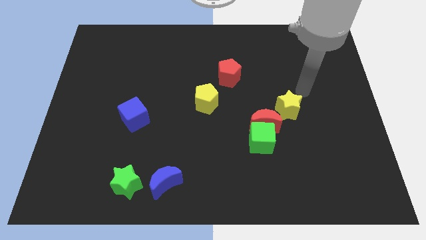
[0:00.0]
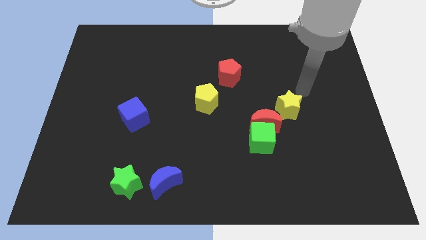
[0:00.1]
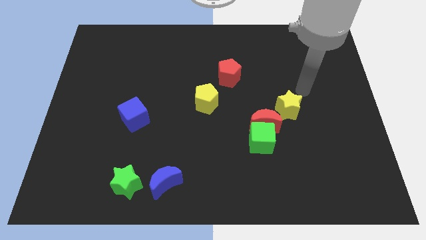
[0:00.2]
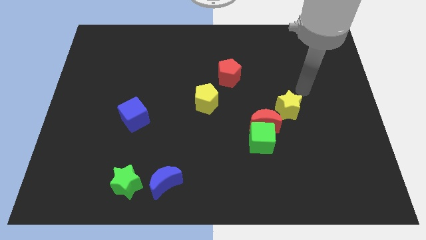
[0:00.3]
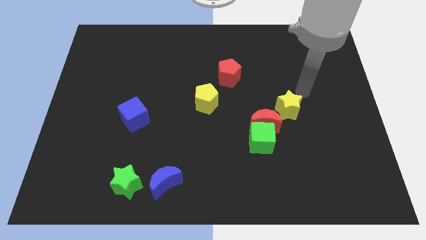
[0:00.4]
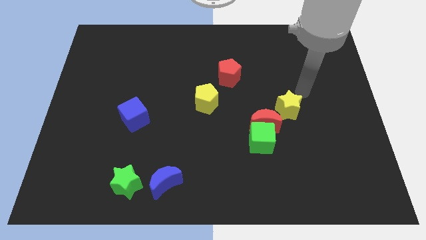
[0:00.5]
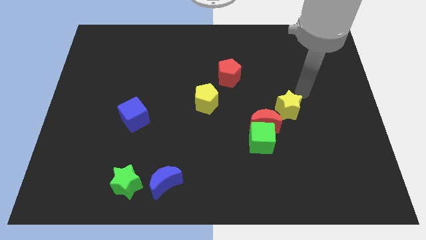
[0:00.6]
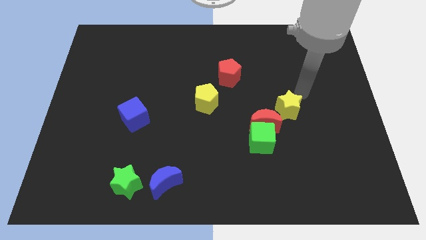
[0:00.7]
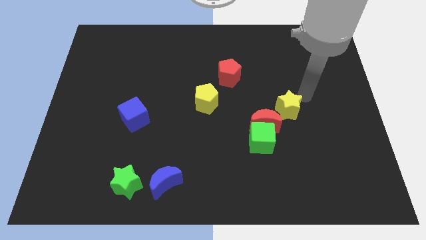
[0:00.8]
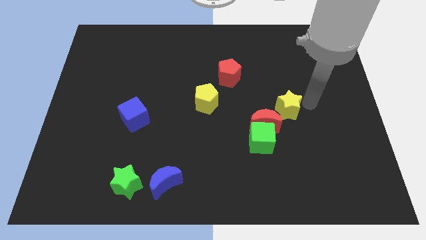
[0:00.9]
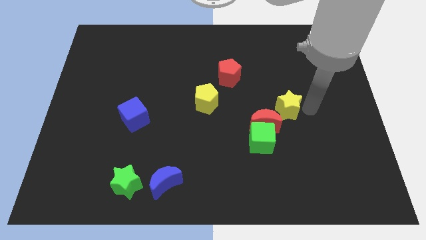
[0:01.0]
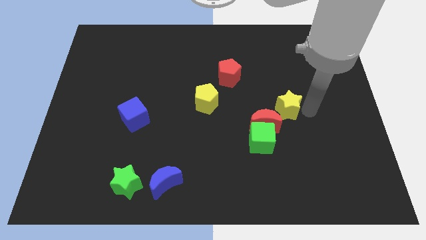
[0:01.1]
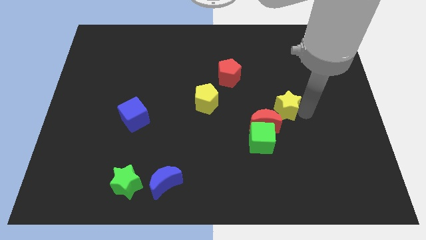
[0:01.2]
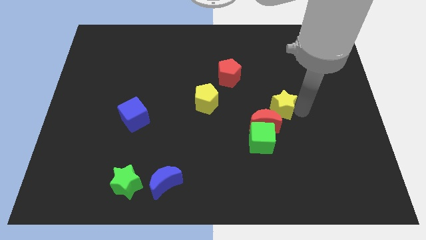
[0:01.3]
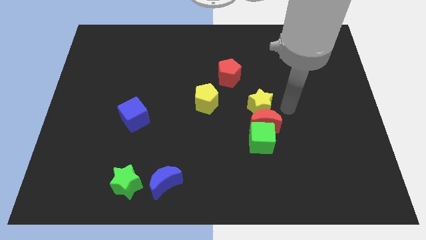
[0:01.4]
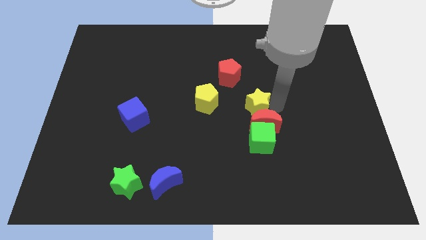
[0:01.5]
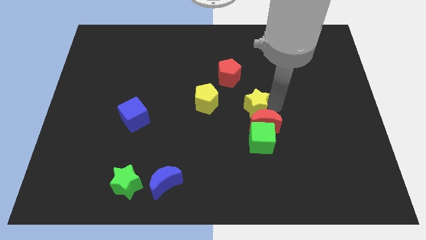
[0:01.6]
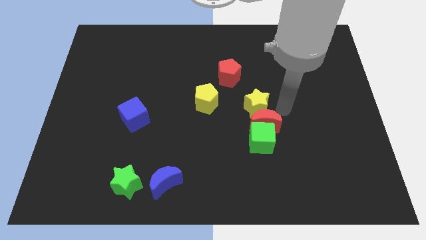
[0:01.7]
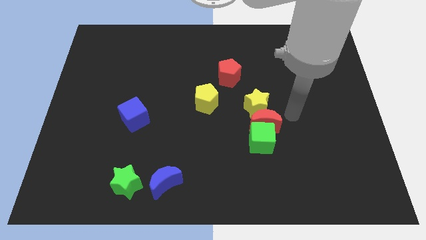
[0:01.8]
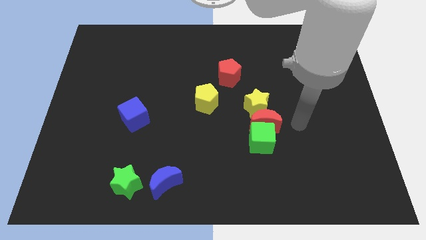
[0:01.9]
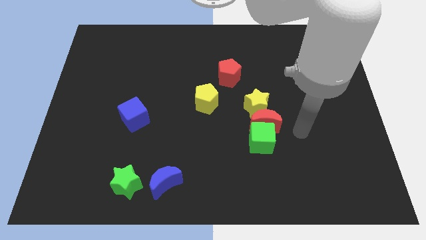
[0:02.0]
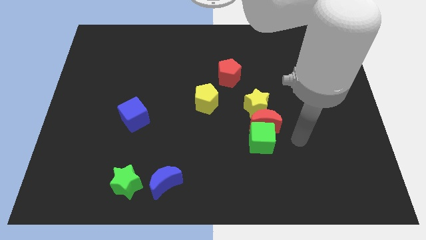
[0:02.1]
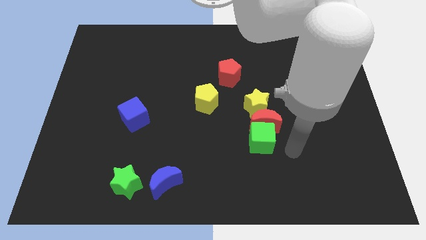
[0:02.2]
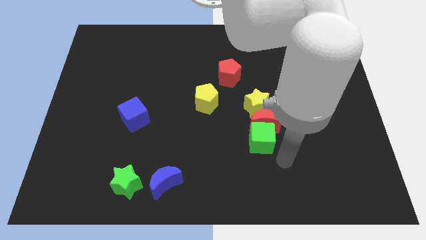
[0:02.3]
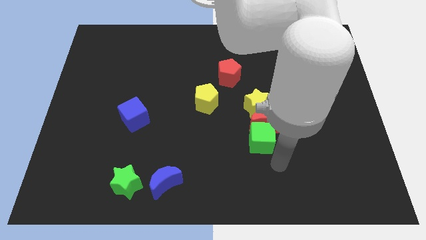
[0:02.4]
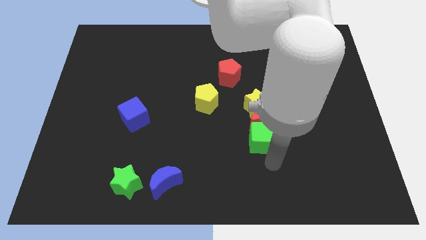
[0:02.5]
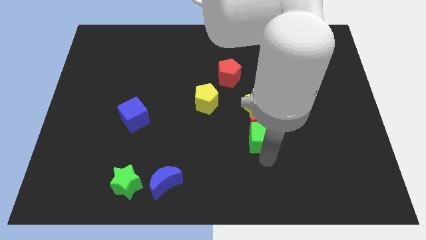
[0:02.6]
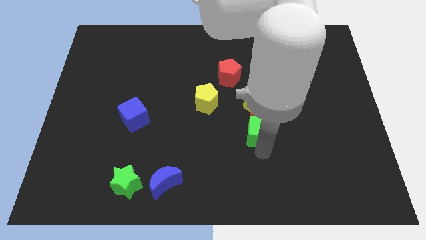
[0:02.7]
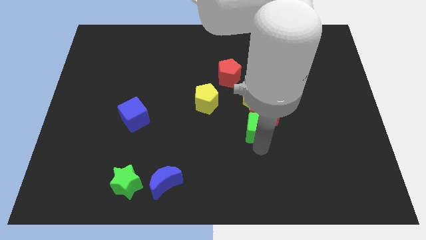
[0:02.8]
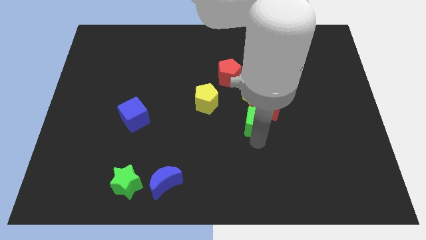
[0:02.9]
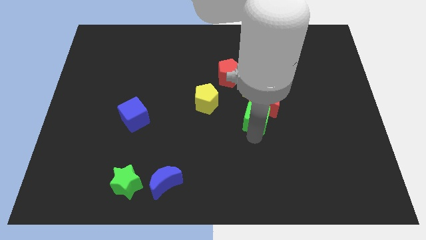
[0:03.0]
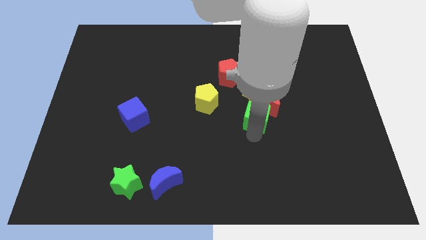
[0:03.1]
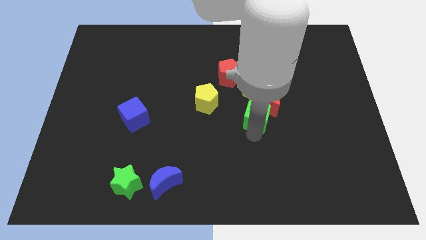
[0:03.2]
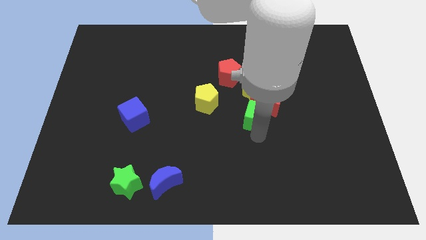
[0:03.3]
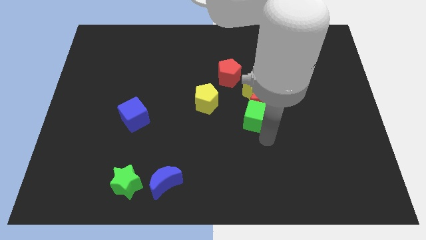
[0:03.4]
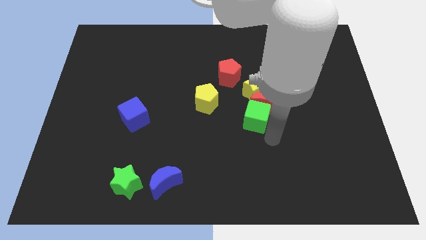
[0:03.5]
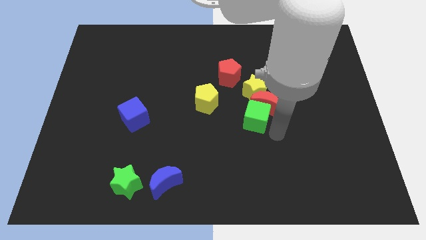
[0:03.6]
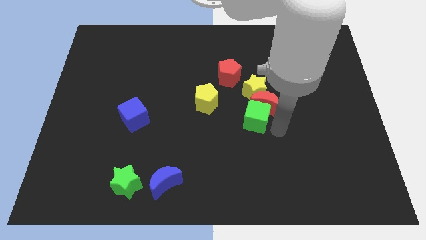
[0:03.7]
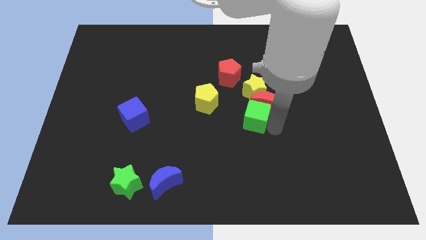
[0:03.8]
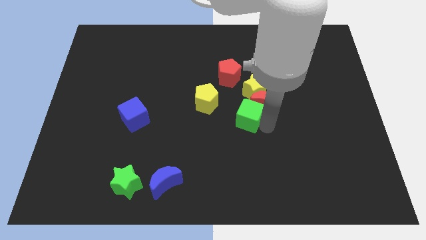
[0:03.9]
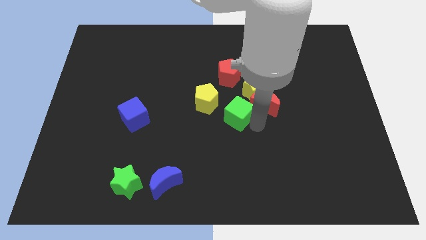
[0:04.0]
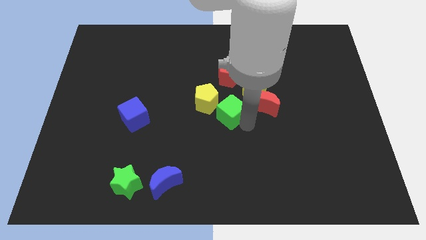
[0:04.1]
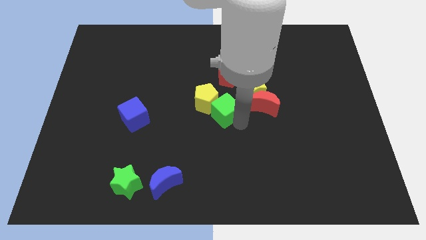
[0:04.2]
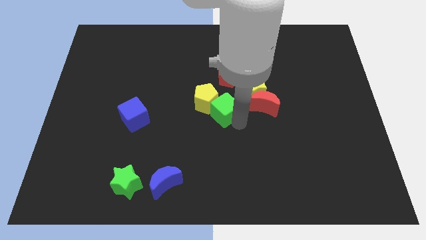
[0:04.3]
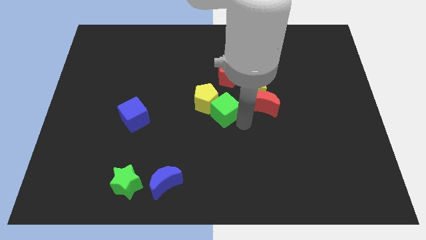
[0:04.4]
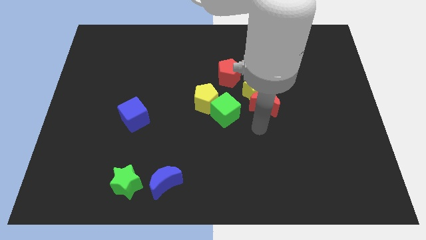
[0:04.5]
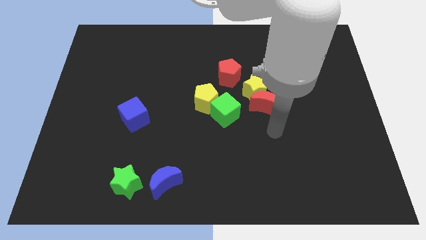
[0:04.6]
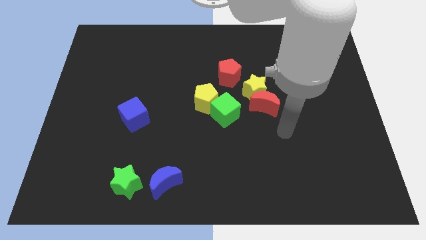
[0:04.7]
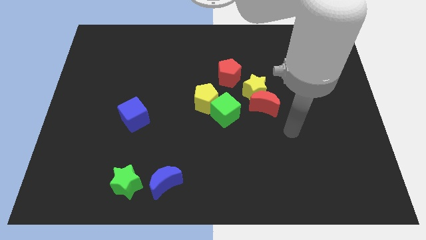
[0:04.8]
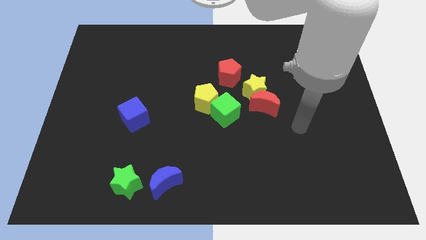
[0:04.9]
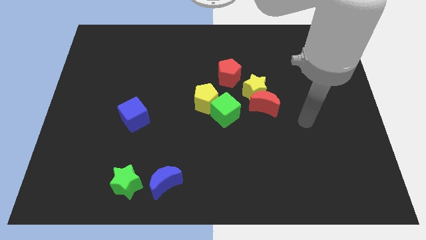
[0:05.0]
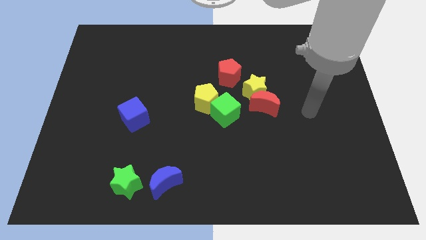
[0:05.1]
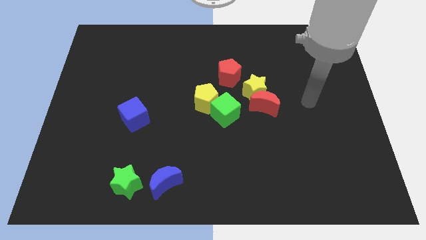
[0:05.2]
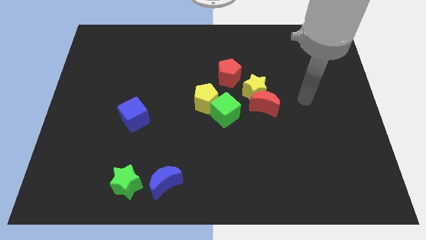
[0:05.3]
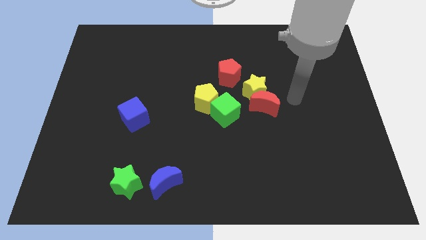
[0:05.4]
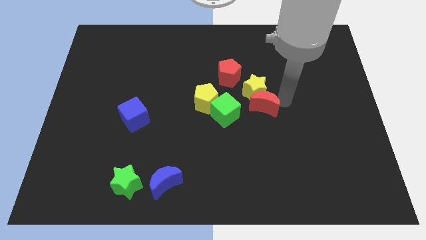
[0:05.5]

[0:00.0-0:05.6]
push the green cube right to the yellow pentagon

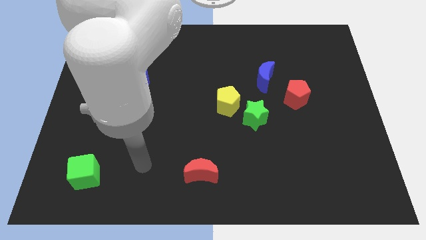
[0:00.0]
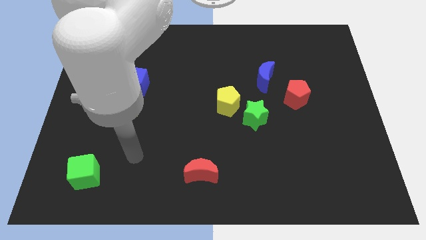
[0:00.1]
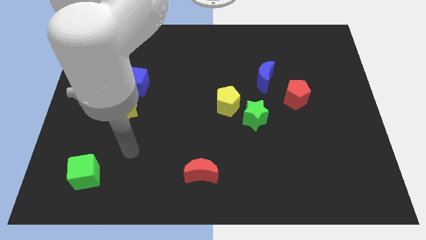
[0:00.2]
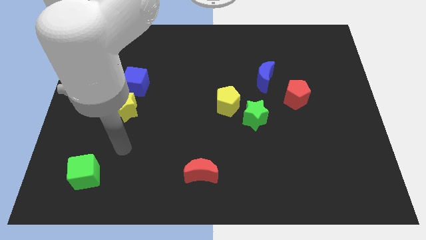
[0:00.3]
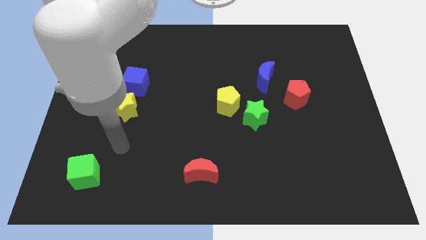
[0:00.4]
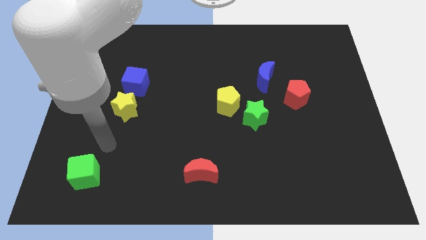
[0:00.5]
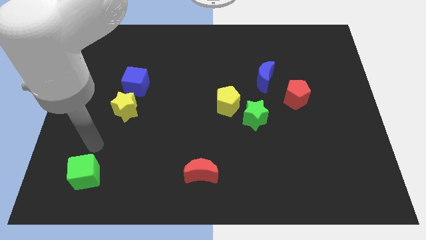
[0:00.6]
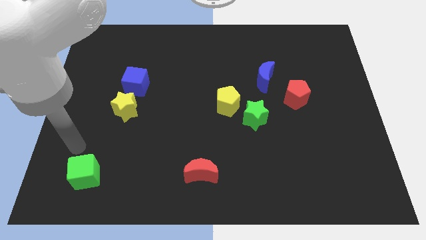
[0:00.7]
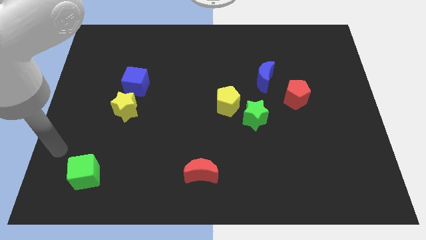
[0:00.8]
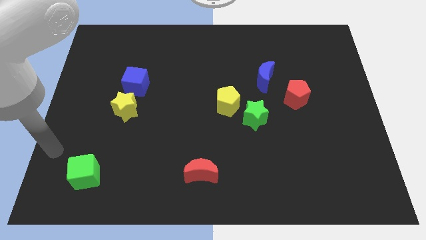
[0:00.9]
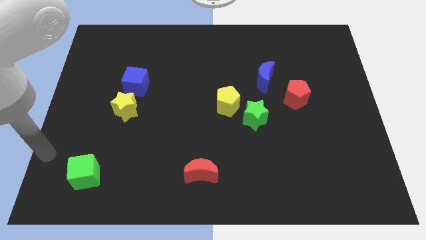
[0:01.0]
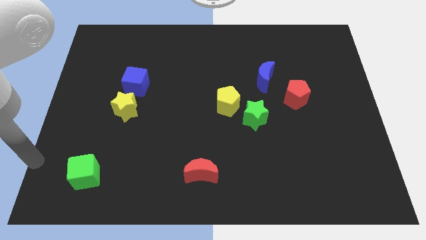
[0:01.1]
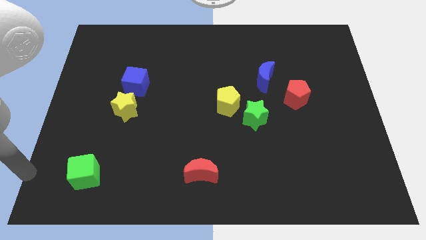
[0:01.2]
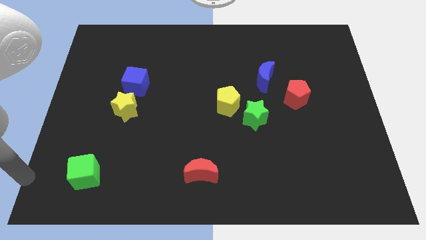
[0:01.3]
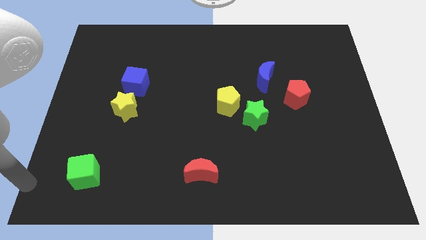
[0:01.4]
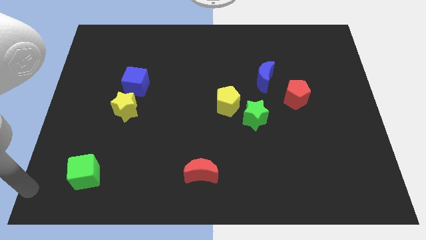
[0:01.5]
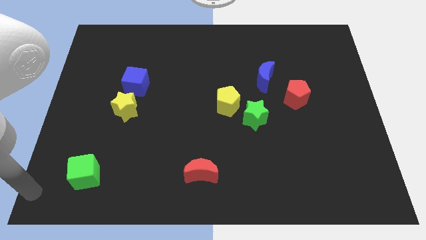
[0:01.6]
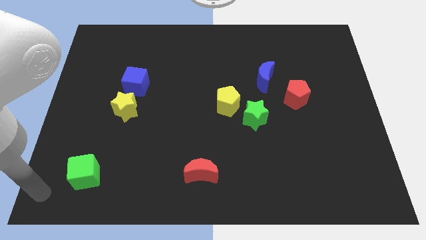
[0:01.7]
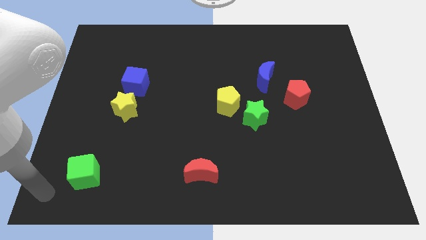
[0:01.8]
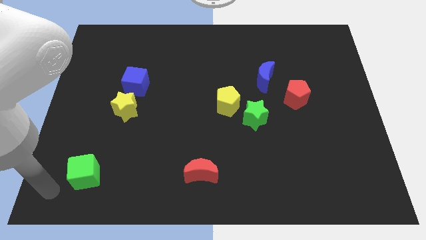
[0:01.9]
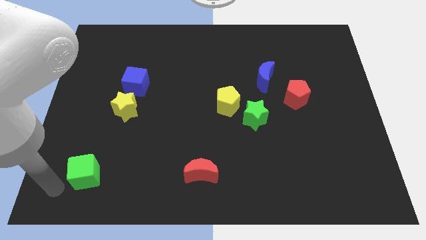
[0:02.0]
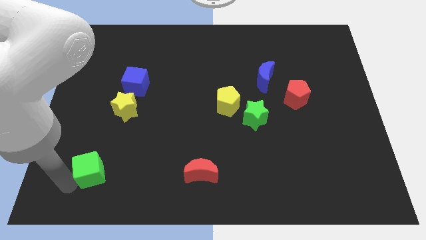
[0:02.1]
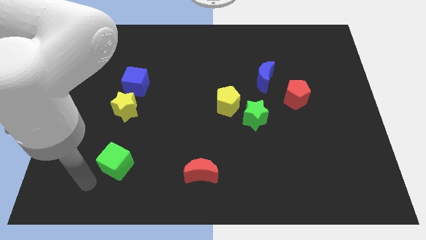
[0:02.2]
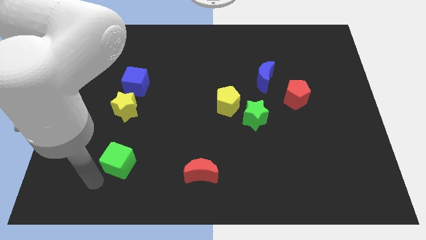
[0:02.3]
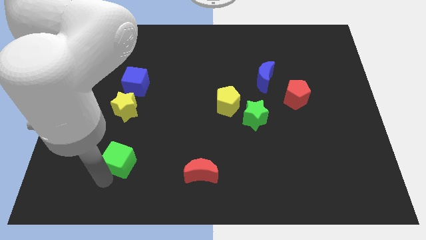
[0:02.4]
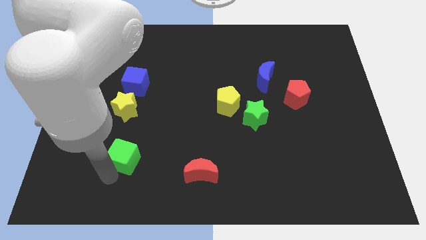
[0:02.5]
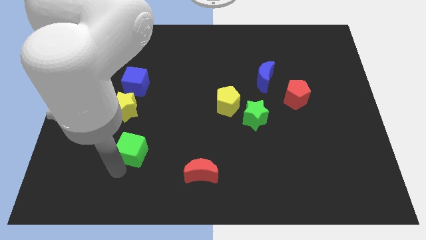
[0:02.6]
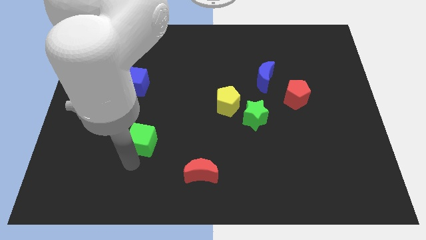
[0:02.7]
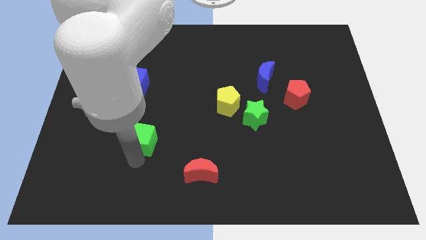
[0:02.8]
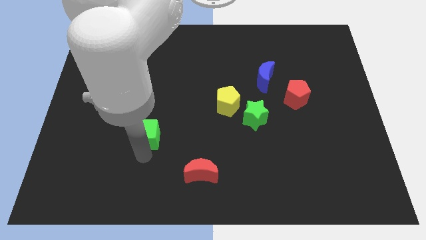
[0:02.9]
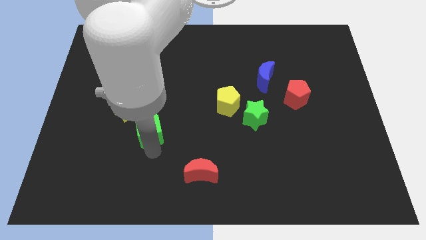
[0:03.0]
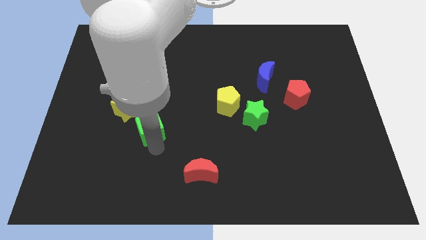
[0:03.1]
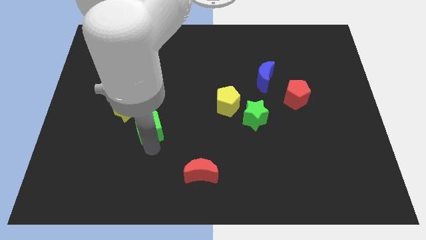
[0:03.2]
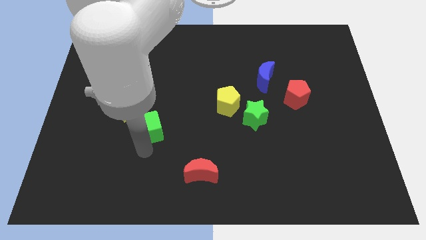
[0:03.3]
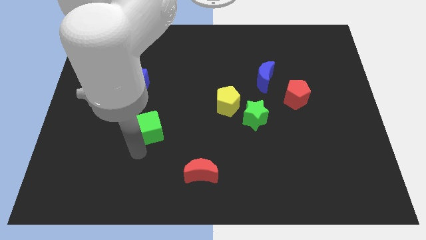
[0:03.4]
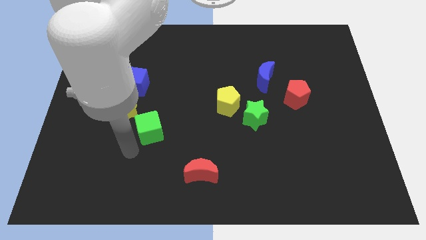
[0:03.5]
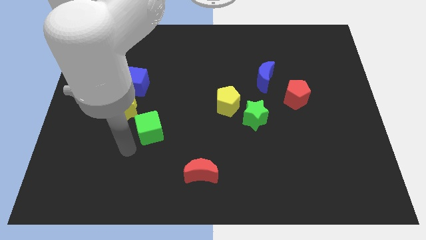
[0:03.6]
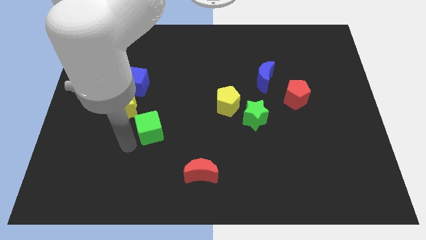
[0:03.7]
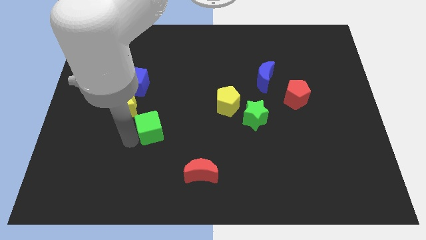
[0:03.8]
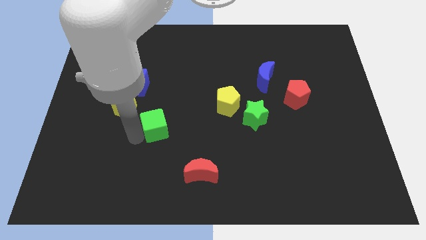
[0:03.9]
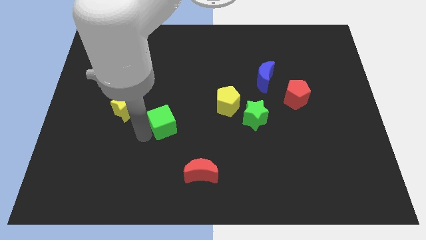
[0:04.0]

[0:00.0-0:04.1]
drag green cube to bottom right of yellow star
